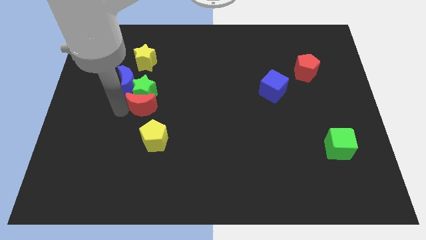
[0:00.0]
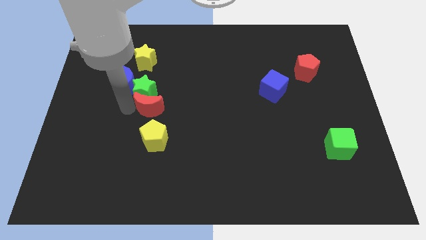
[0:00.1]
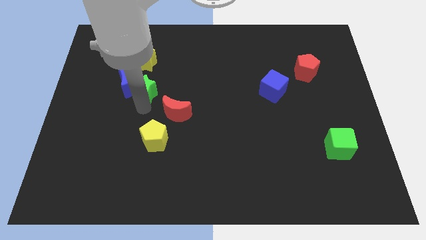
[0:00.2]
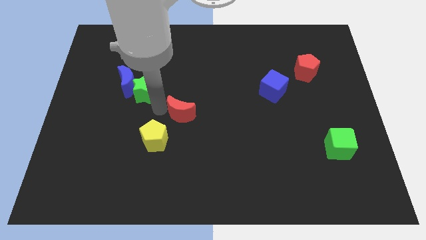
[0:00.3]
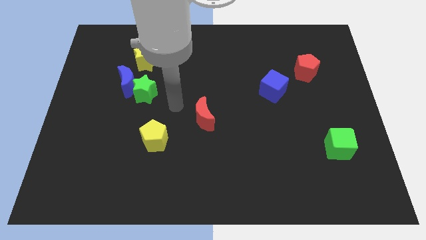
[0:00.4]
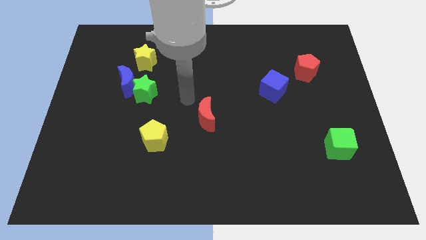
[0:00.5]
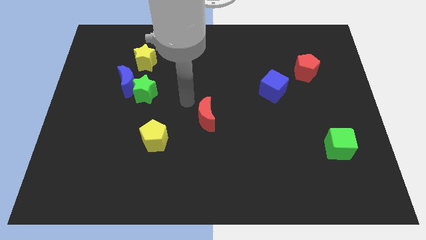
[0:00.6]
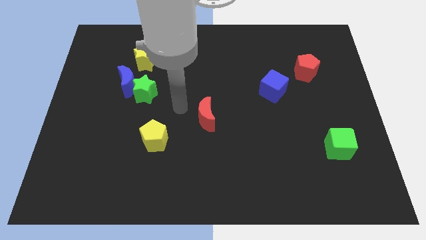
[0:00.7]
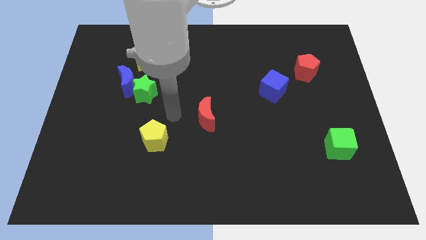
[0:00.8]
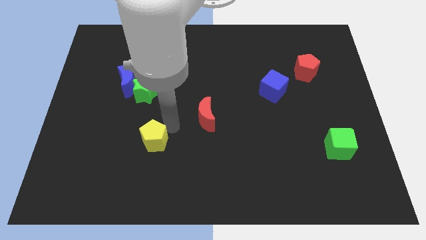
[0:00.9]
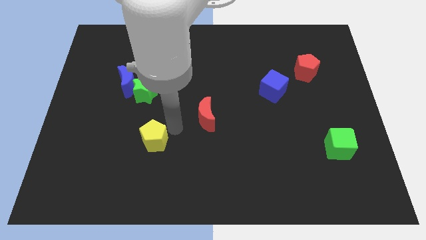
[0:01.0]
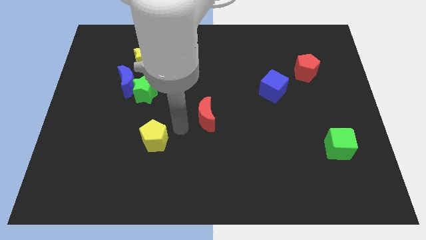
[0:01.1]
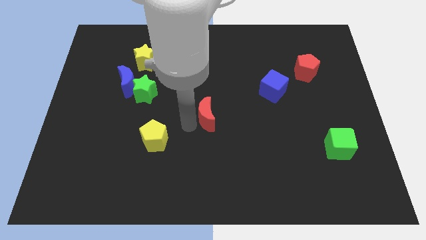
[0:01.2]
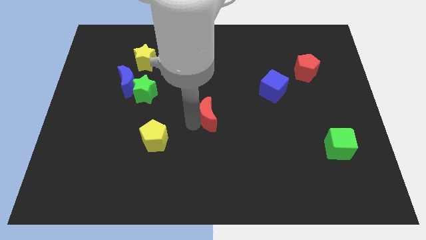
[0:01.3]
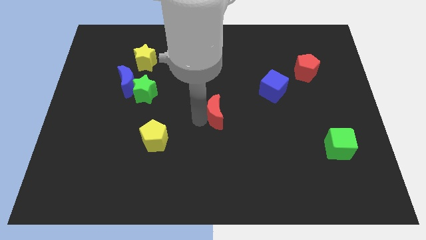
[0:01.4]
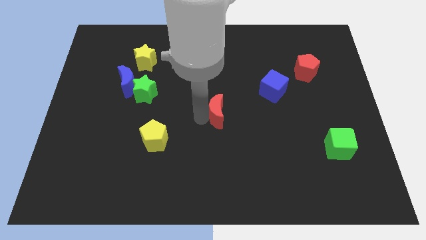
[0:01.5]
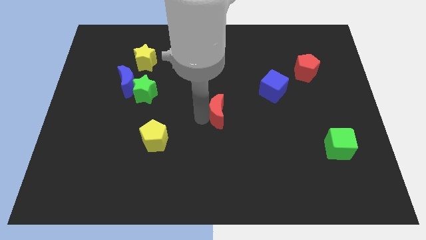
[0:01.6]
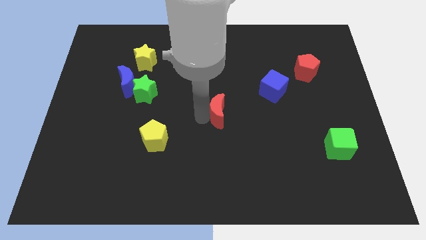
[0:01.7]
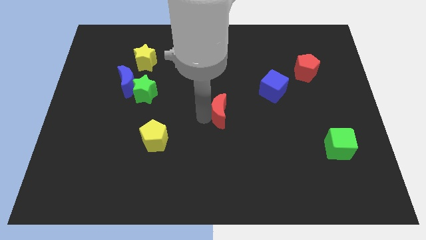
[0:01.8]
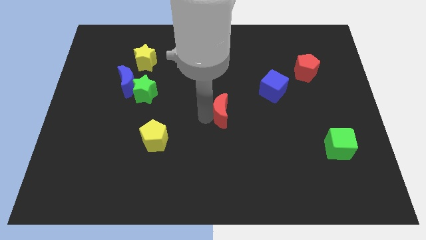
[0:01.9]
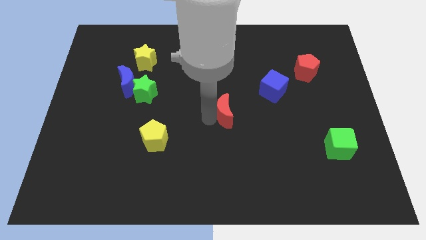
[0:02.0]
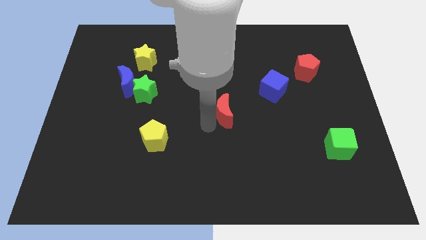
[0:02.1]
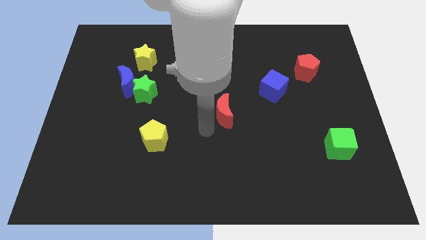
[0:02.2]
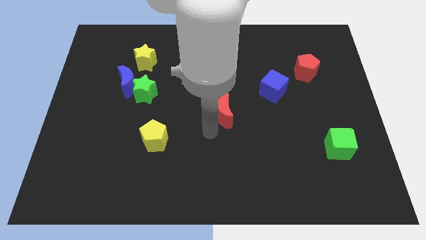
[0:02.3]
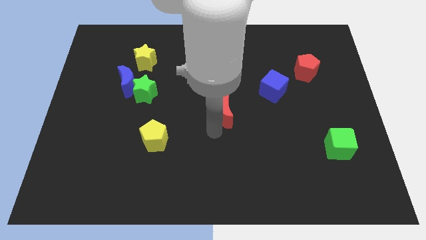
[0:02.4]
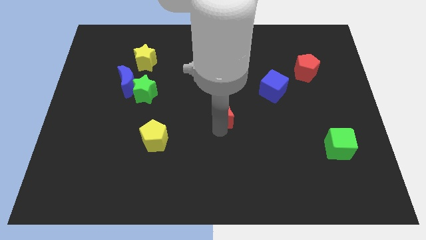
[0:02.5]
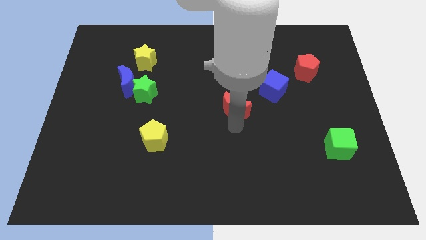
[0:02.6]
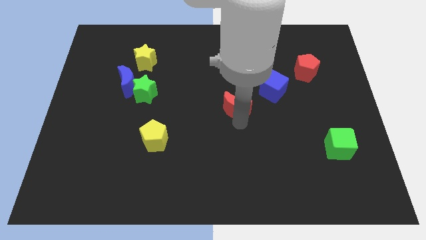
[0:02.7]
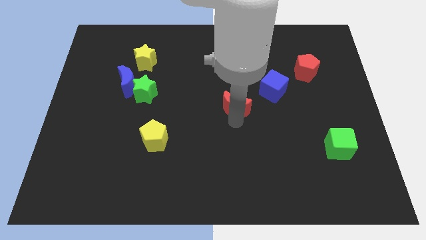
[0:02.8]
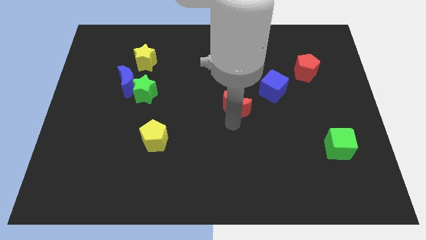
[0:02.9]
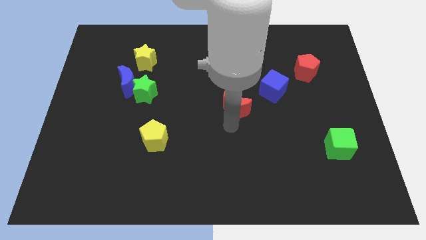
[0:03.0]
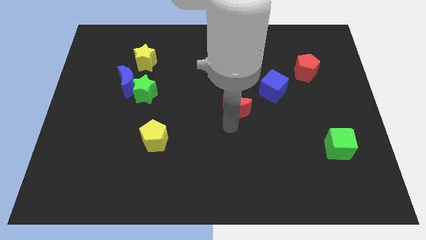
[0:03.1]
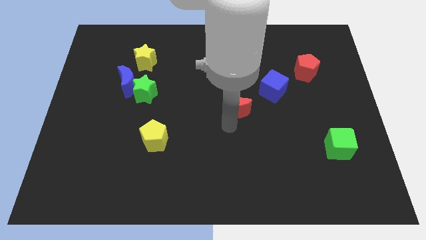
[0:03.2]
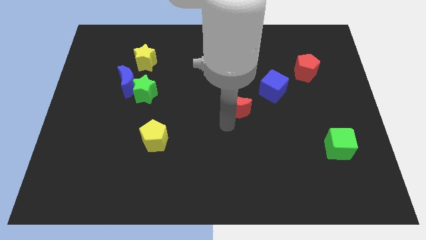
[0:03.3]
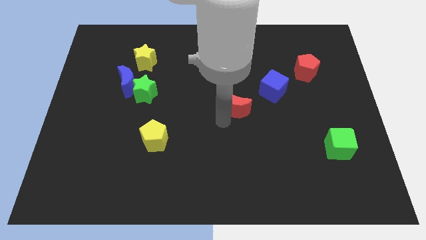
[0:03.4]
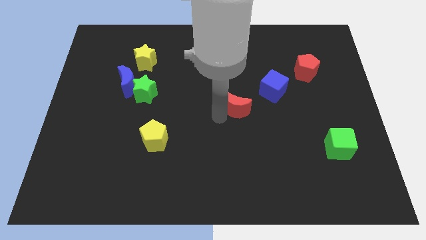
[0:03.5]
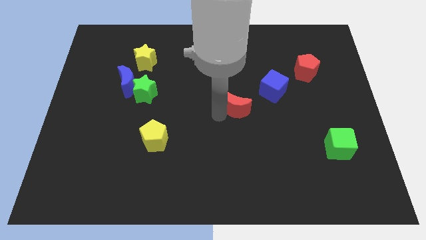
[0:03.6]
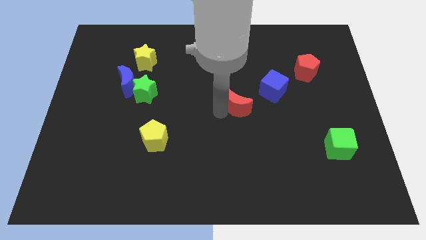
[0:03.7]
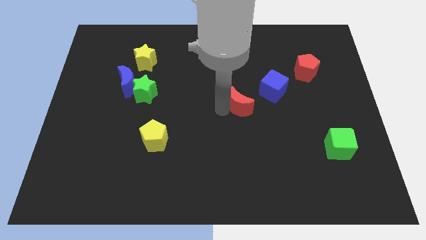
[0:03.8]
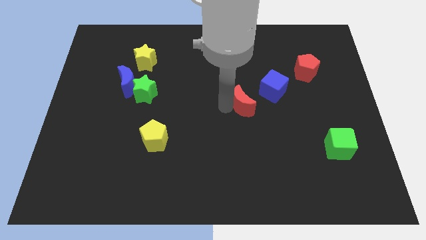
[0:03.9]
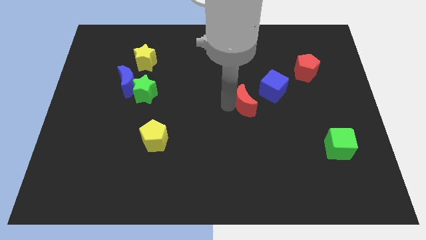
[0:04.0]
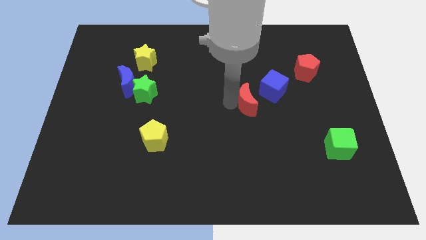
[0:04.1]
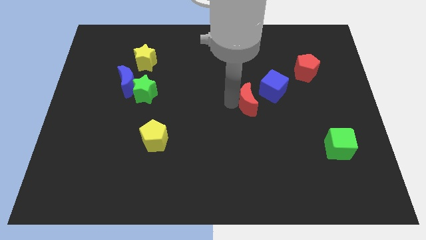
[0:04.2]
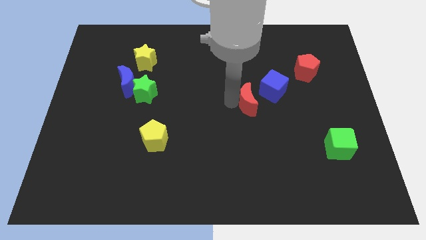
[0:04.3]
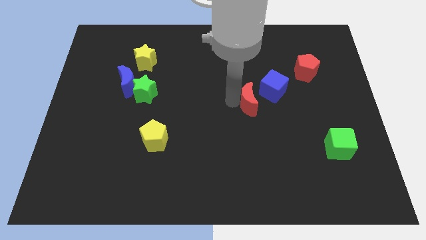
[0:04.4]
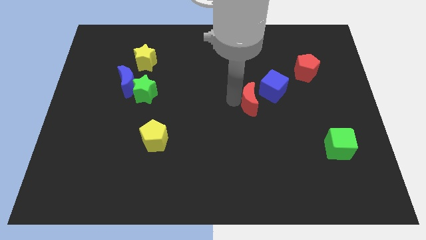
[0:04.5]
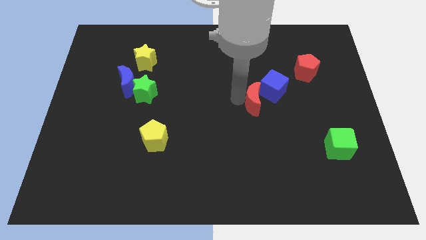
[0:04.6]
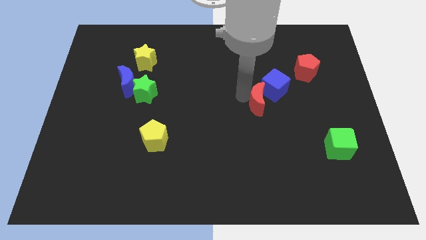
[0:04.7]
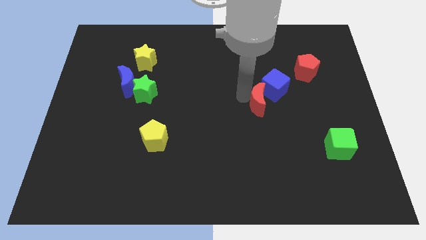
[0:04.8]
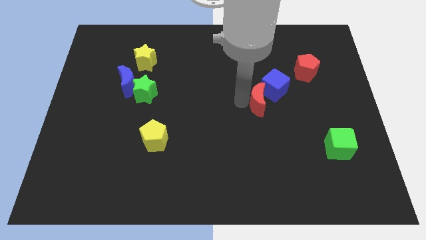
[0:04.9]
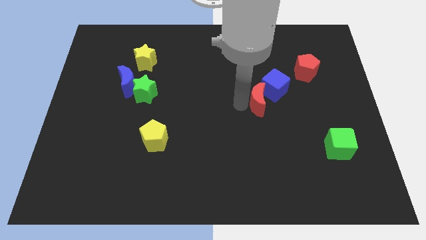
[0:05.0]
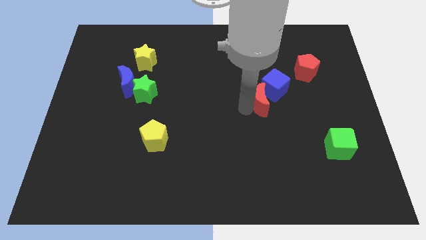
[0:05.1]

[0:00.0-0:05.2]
push the red crescent into the blue cube

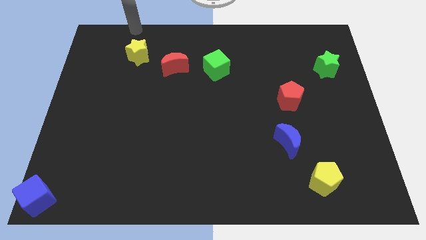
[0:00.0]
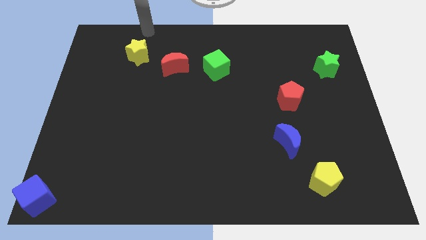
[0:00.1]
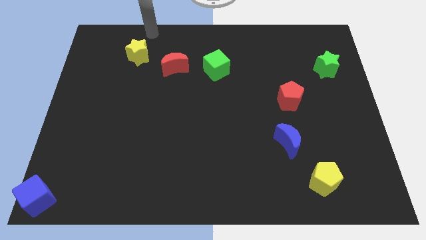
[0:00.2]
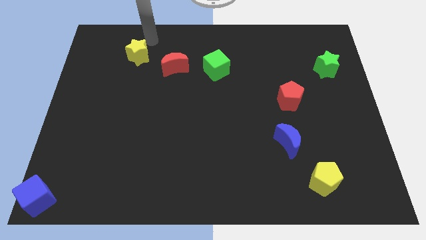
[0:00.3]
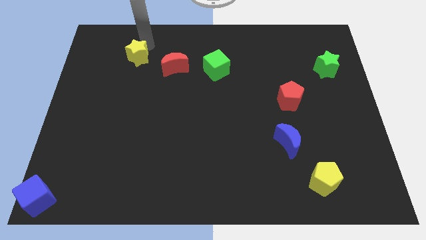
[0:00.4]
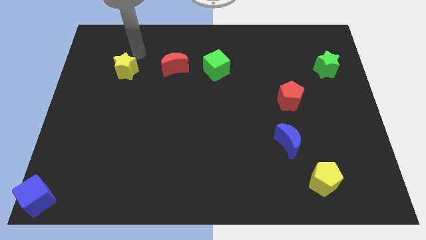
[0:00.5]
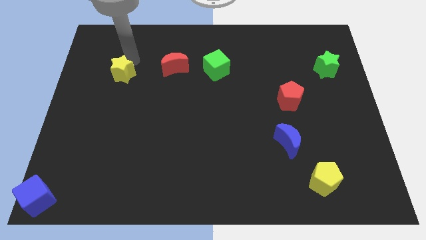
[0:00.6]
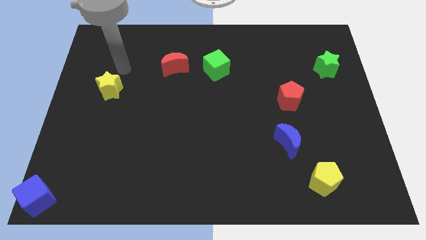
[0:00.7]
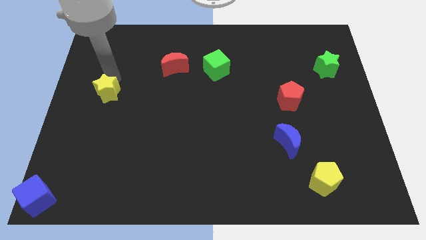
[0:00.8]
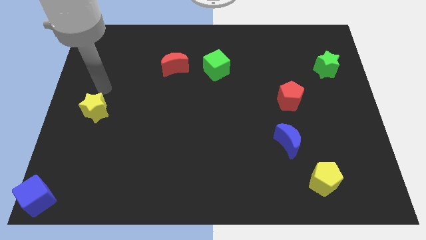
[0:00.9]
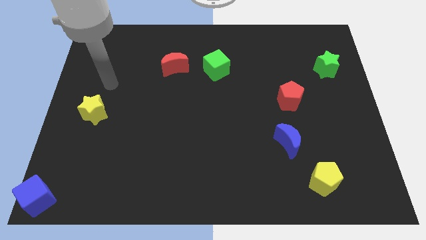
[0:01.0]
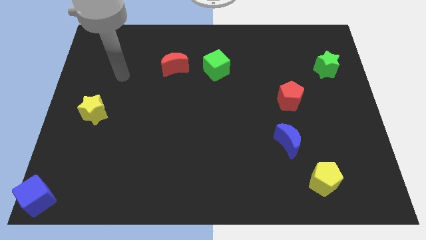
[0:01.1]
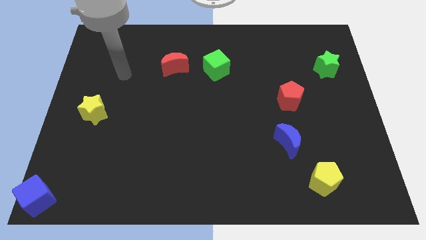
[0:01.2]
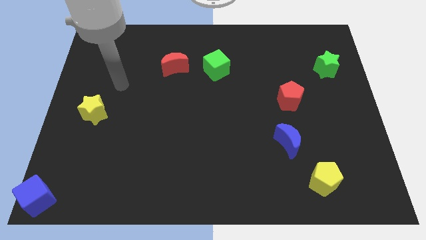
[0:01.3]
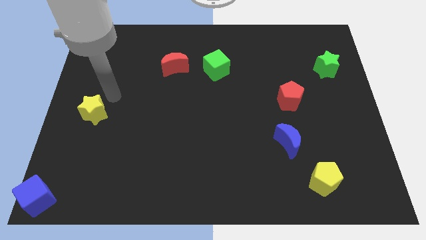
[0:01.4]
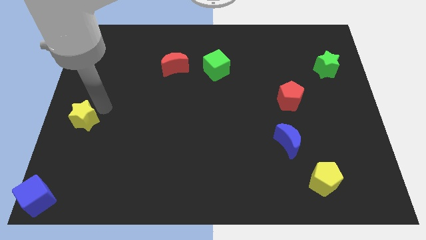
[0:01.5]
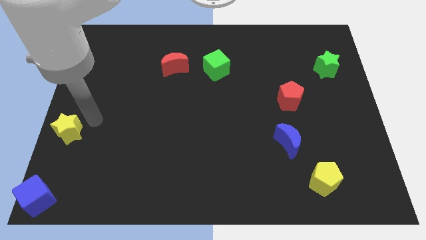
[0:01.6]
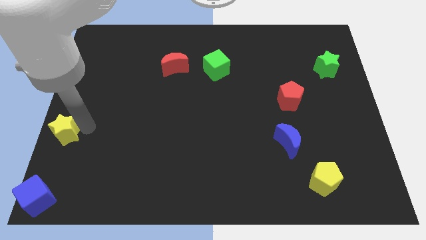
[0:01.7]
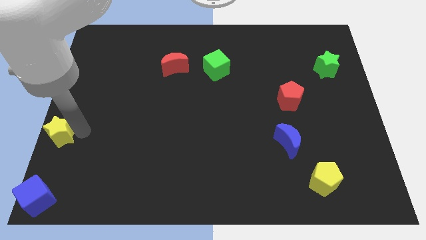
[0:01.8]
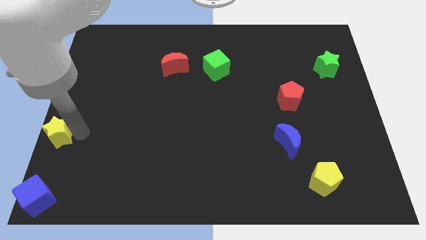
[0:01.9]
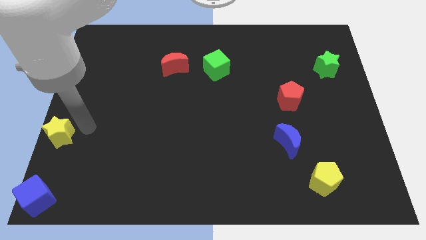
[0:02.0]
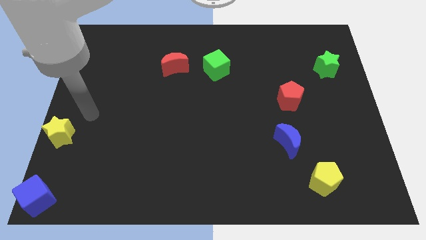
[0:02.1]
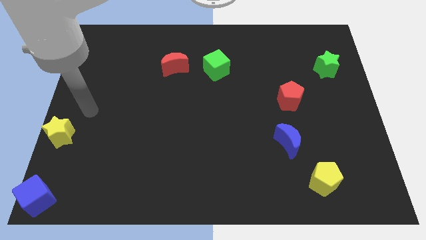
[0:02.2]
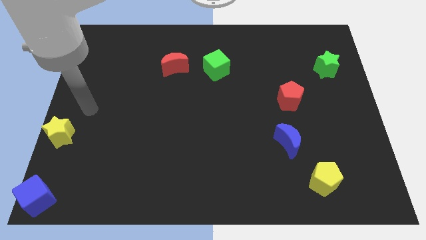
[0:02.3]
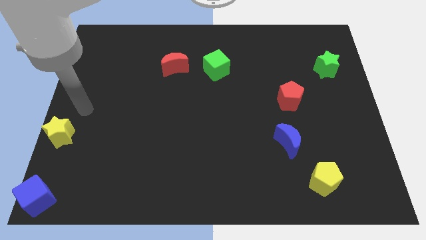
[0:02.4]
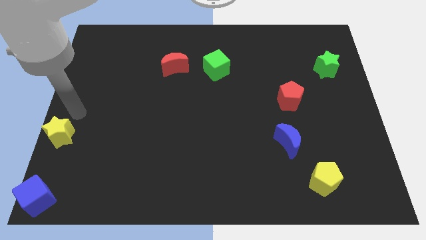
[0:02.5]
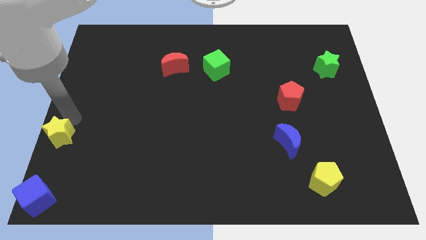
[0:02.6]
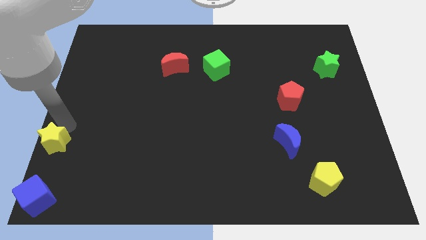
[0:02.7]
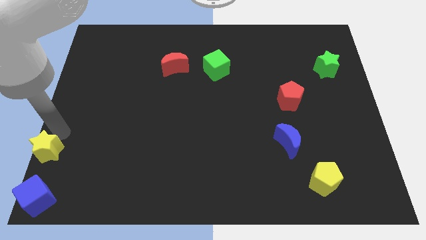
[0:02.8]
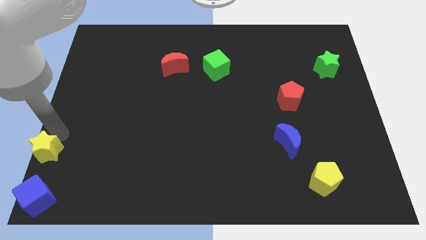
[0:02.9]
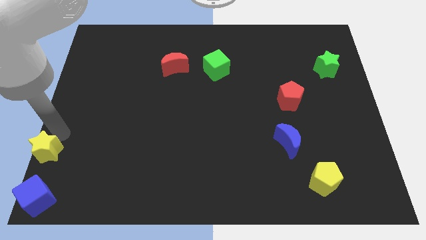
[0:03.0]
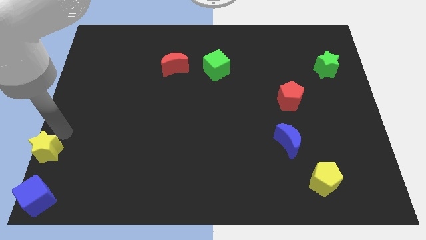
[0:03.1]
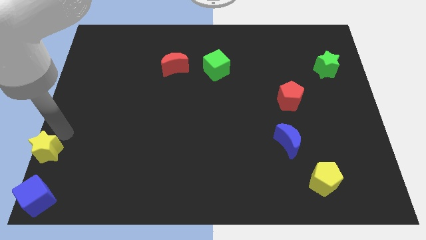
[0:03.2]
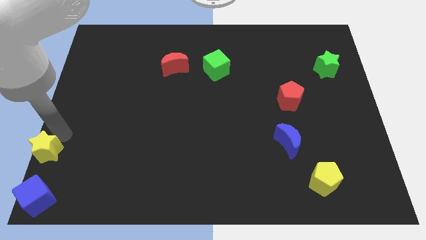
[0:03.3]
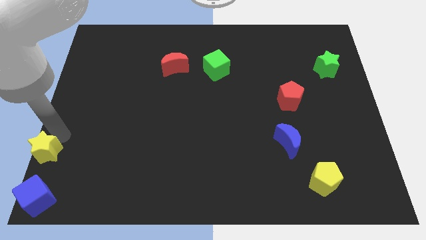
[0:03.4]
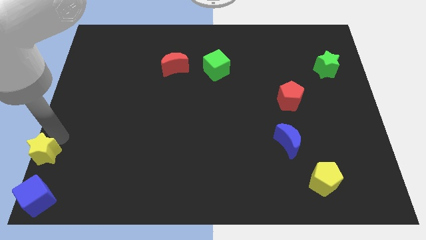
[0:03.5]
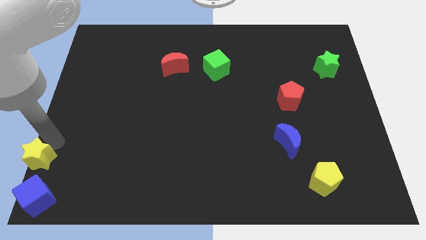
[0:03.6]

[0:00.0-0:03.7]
place the yellow star above the blue cube
